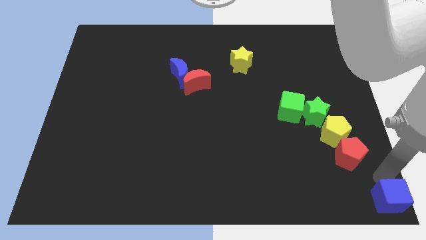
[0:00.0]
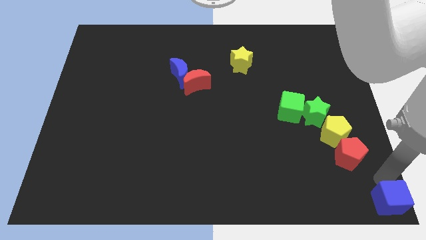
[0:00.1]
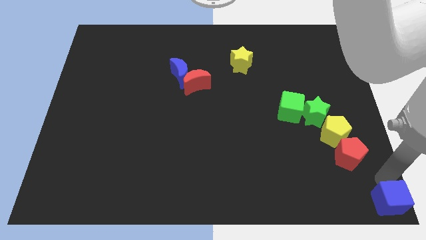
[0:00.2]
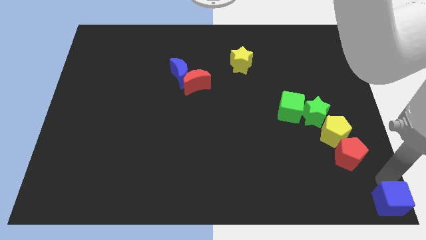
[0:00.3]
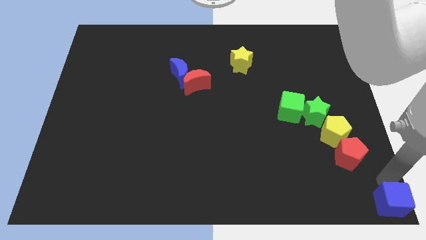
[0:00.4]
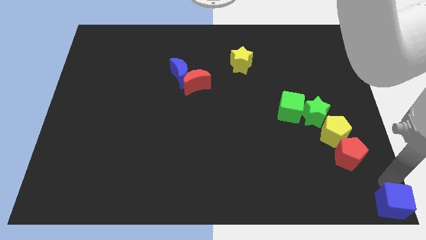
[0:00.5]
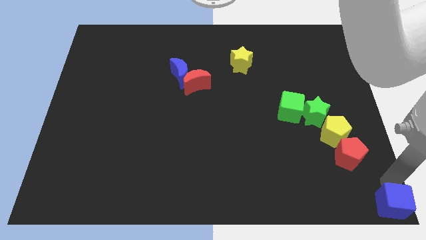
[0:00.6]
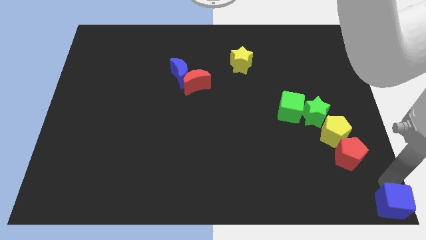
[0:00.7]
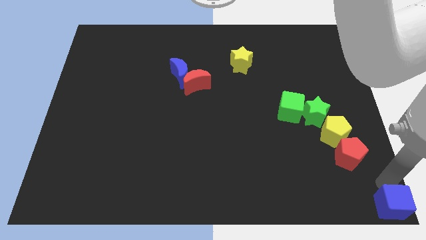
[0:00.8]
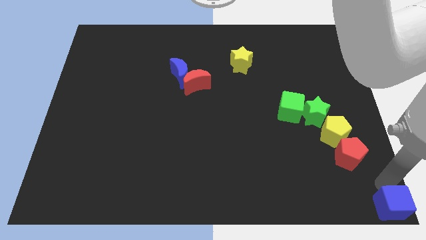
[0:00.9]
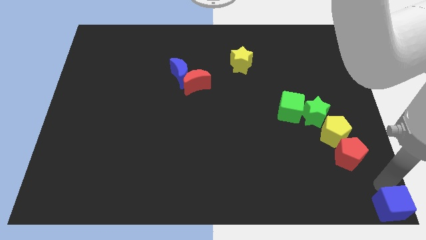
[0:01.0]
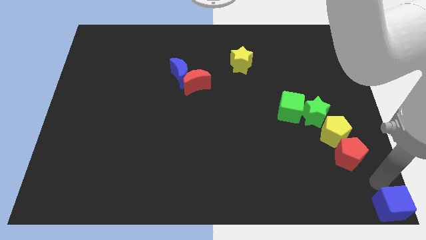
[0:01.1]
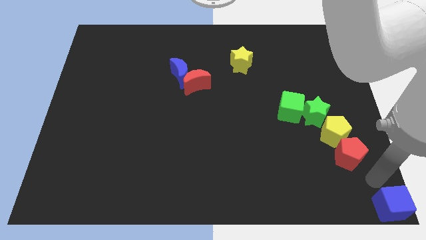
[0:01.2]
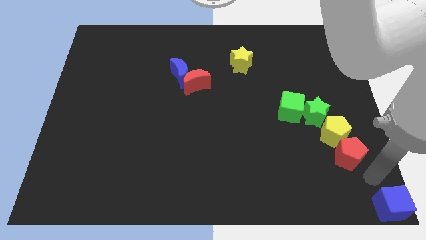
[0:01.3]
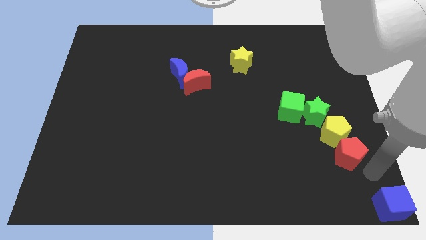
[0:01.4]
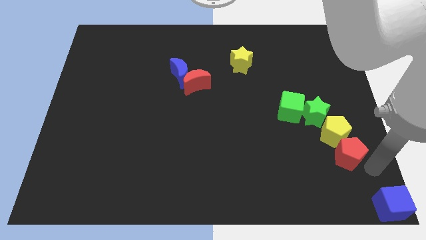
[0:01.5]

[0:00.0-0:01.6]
place your arm in between the red pentagon and blue cube

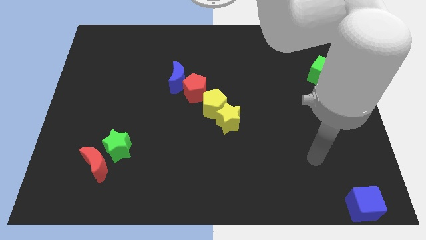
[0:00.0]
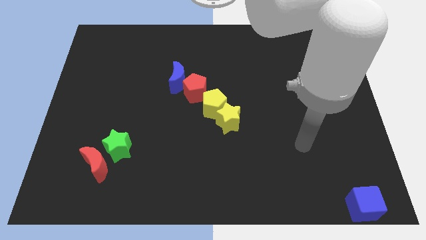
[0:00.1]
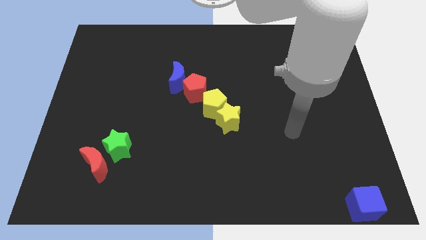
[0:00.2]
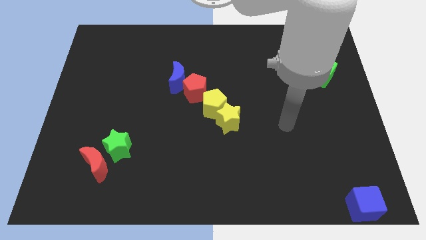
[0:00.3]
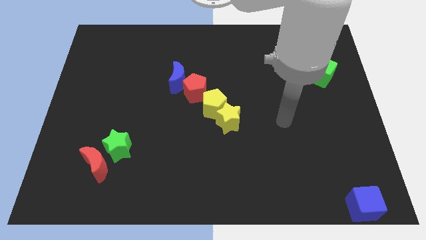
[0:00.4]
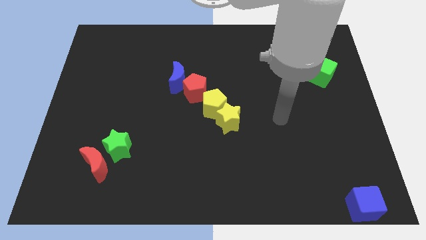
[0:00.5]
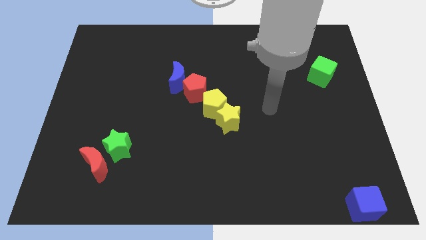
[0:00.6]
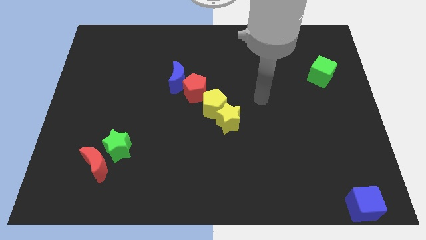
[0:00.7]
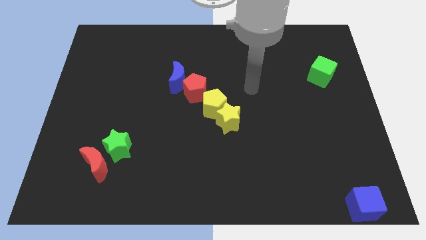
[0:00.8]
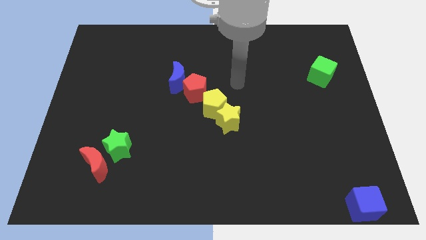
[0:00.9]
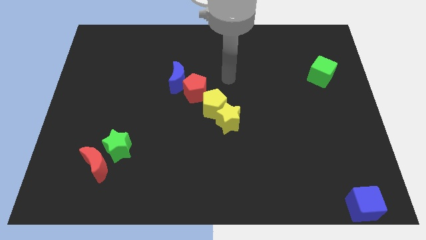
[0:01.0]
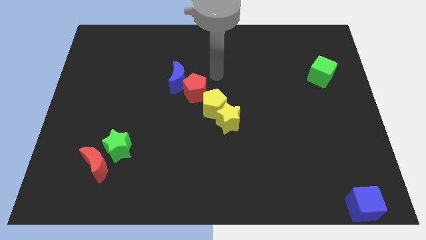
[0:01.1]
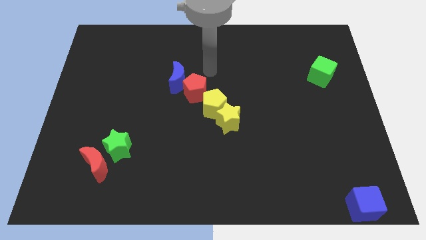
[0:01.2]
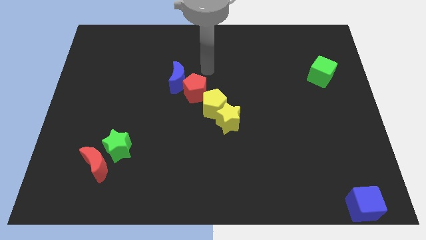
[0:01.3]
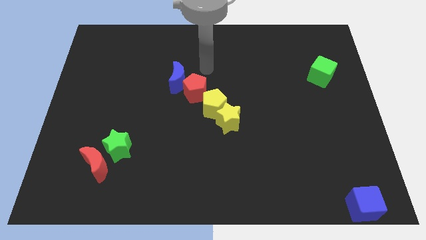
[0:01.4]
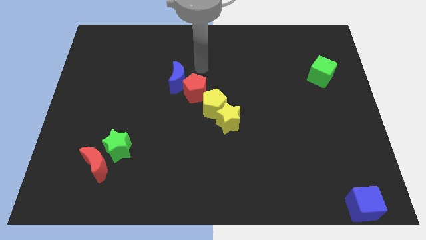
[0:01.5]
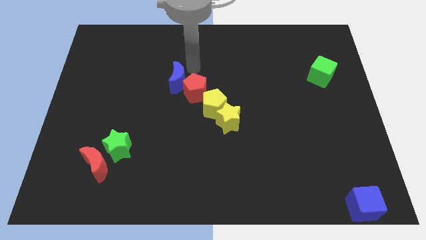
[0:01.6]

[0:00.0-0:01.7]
move the arm to the top of the red pentagon

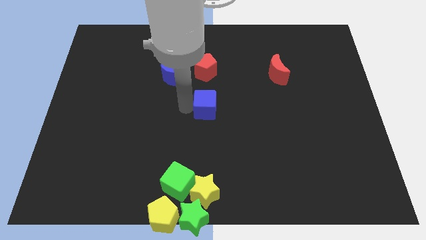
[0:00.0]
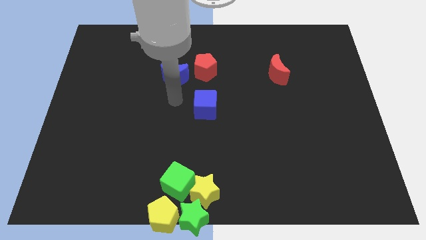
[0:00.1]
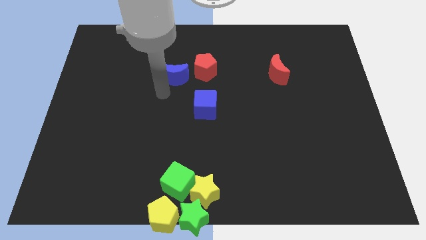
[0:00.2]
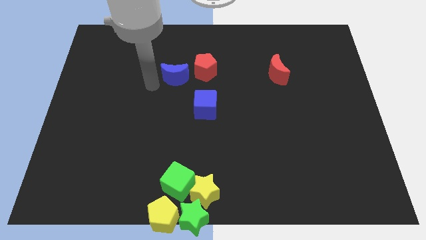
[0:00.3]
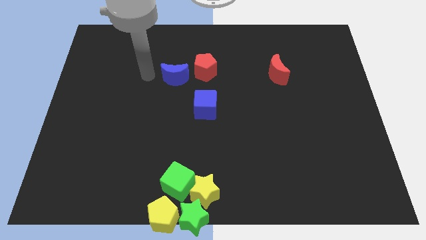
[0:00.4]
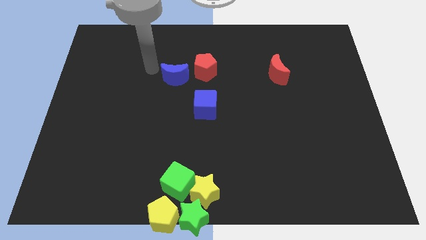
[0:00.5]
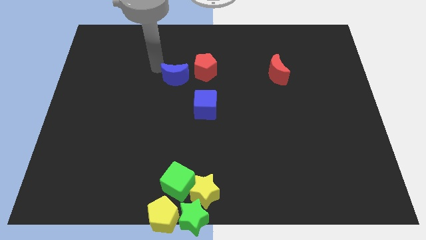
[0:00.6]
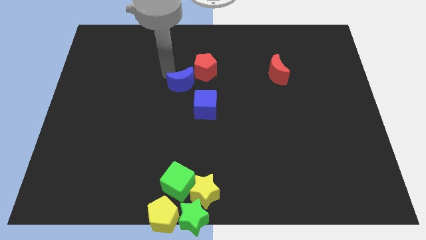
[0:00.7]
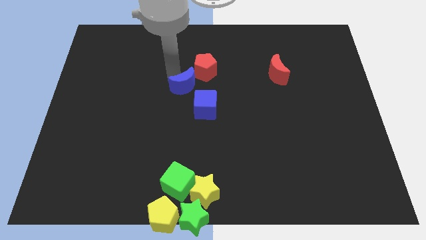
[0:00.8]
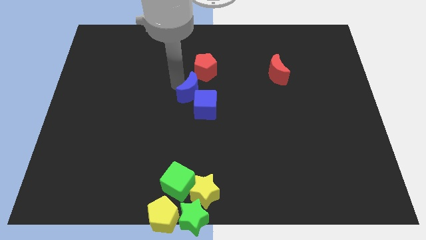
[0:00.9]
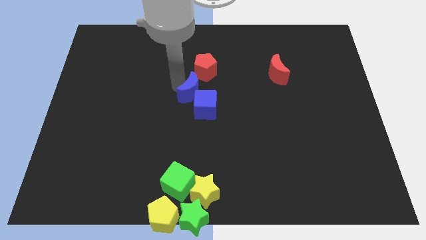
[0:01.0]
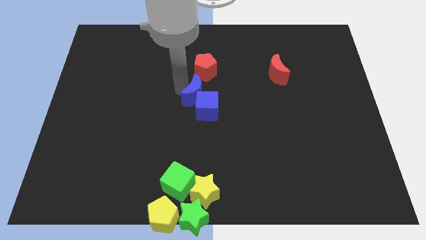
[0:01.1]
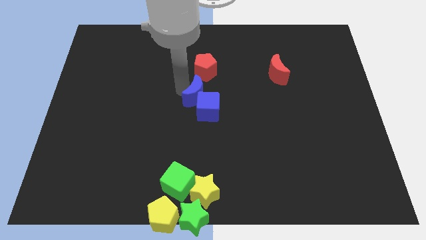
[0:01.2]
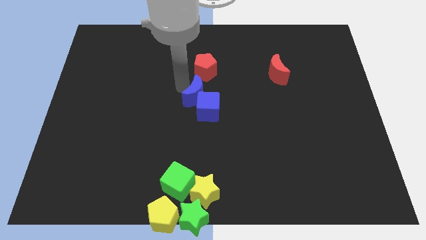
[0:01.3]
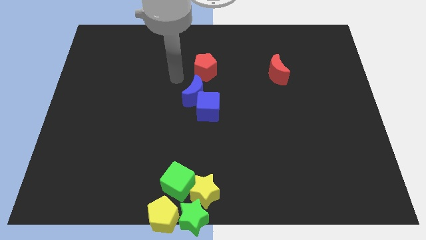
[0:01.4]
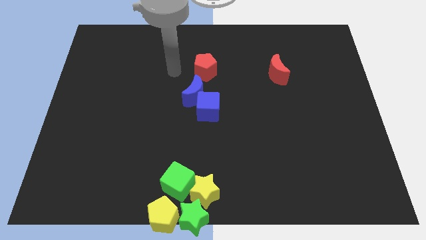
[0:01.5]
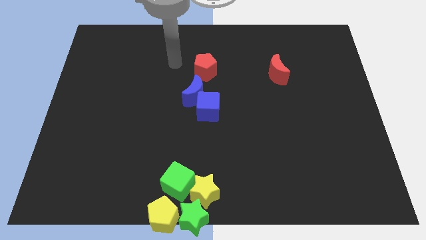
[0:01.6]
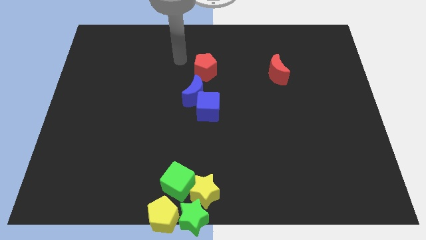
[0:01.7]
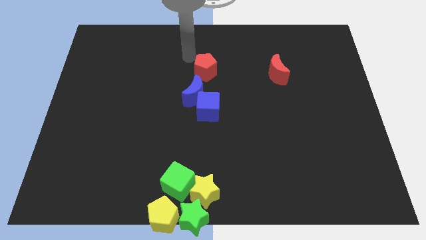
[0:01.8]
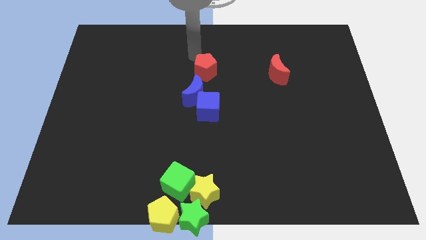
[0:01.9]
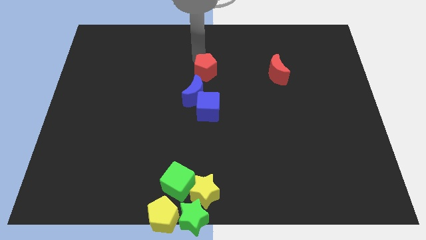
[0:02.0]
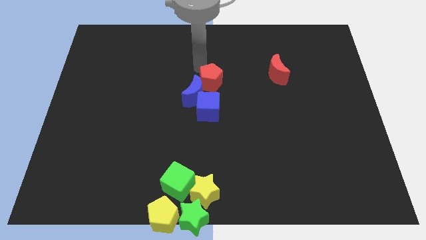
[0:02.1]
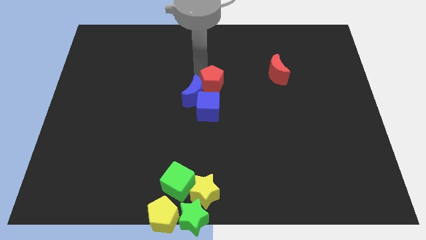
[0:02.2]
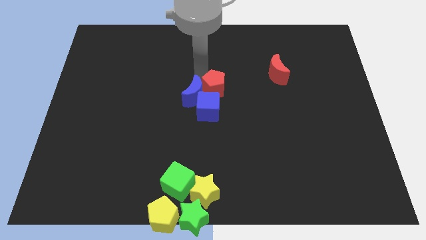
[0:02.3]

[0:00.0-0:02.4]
push the blue moon and red pentagon towards the blue cube

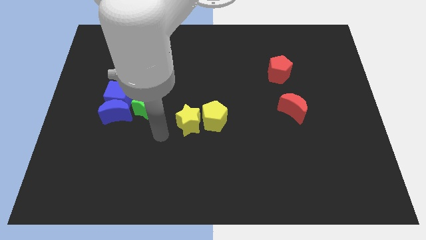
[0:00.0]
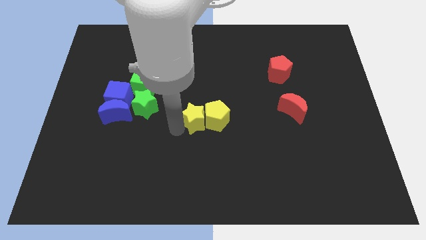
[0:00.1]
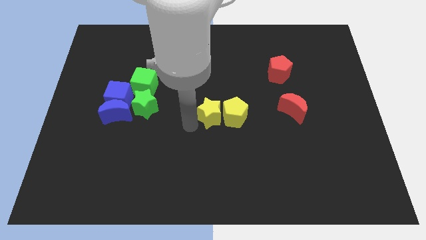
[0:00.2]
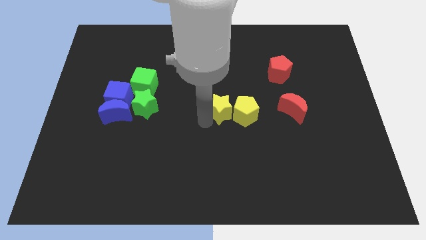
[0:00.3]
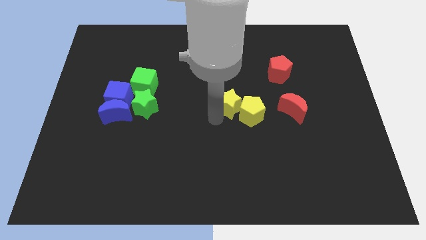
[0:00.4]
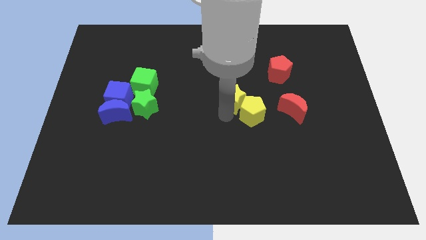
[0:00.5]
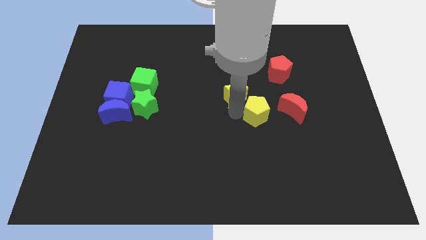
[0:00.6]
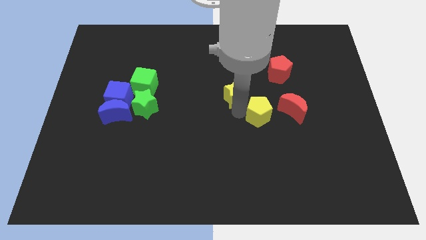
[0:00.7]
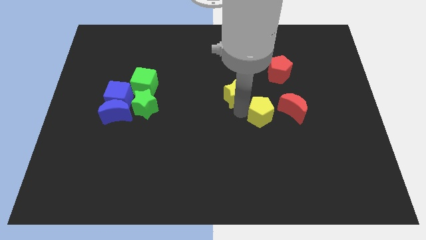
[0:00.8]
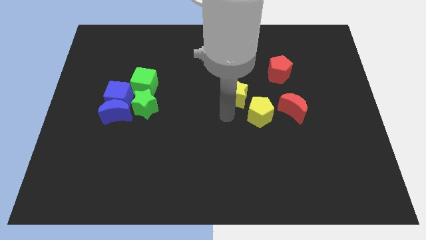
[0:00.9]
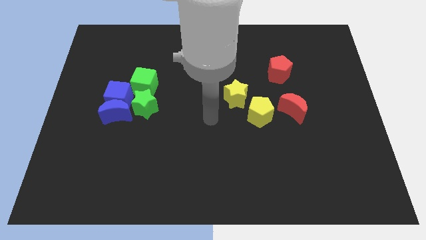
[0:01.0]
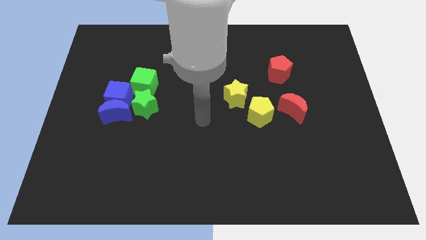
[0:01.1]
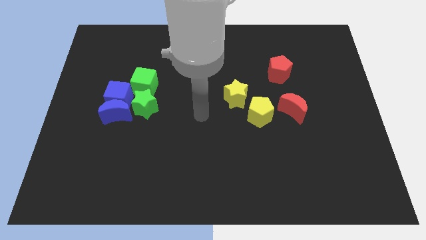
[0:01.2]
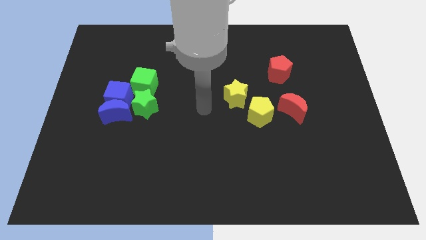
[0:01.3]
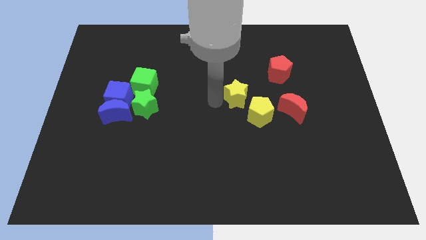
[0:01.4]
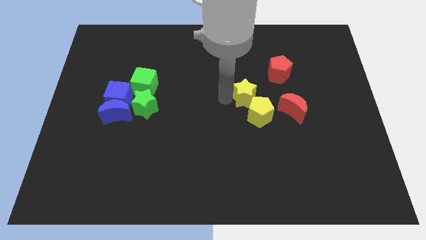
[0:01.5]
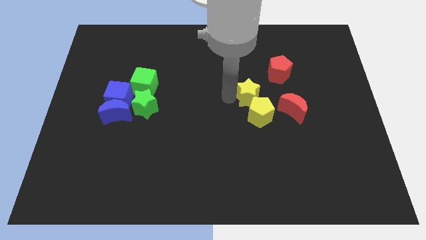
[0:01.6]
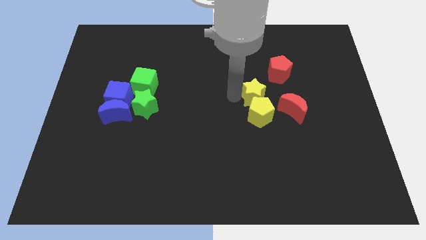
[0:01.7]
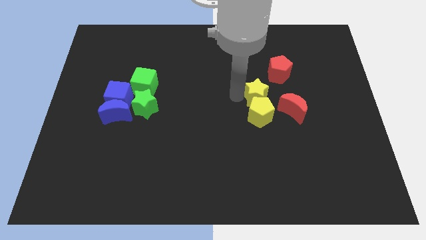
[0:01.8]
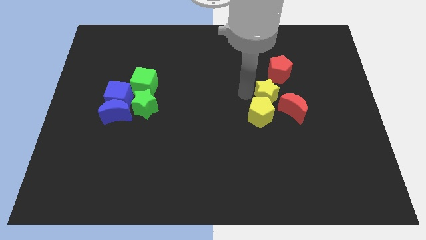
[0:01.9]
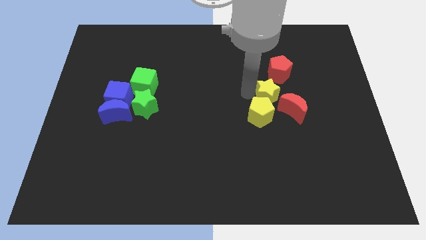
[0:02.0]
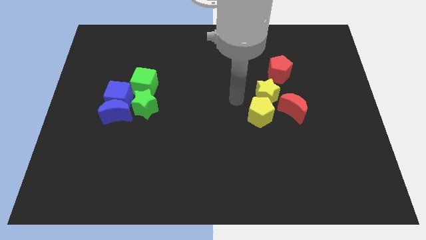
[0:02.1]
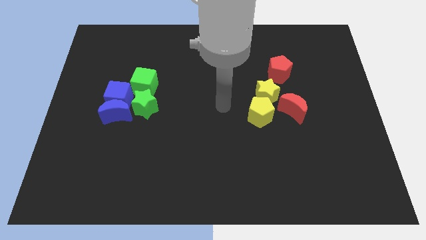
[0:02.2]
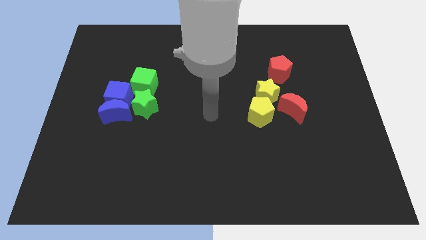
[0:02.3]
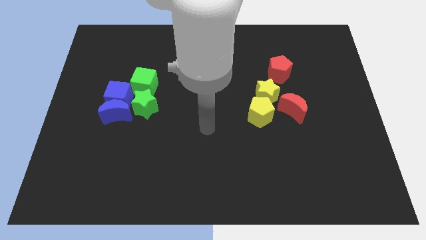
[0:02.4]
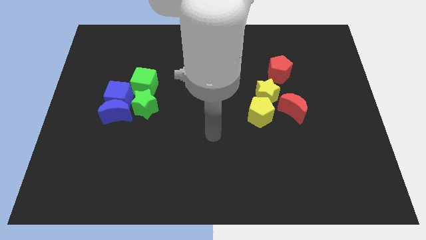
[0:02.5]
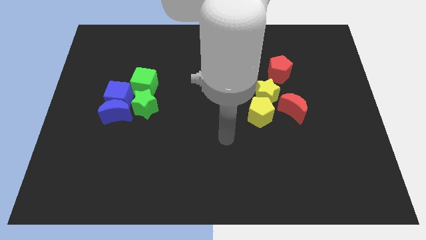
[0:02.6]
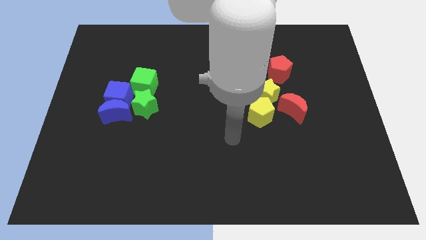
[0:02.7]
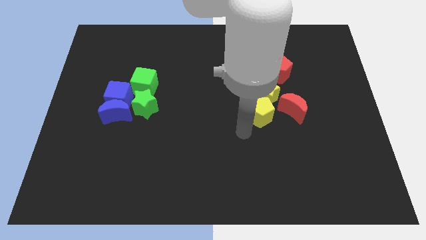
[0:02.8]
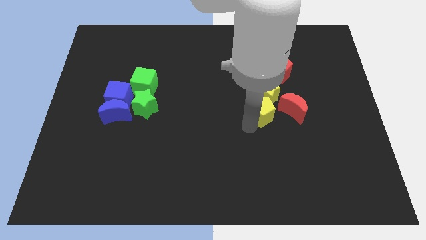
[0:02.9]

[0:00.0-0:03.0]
place the yellow star above the yellow pentagon

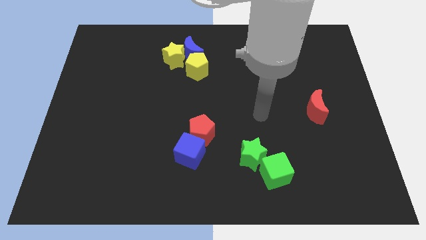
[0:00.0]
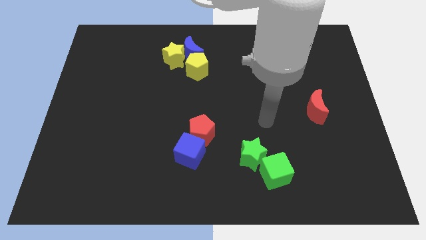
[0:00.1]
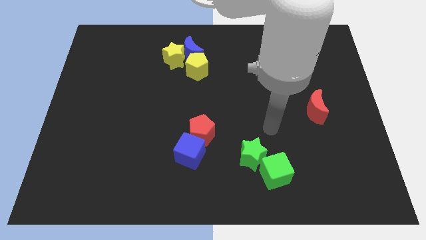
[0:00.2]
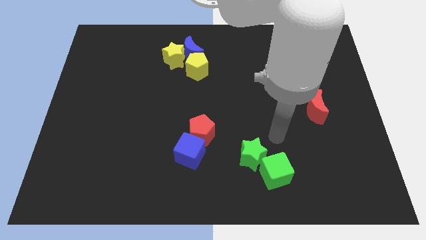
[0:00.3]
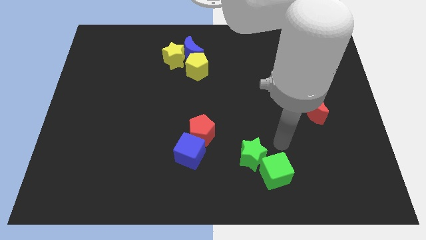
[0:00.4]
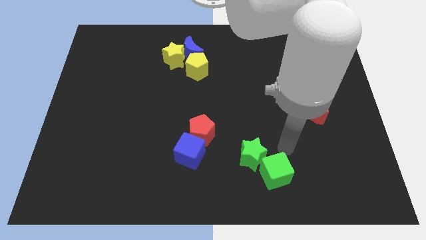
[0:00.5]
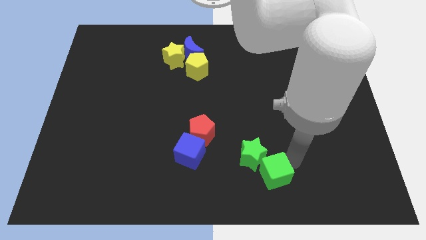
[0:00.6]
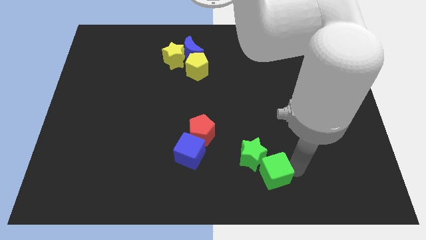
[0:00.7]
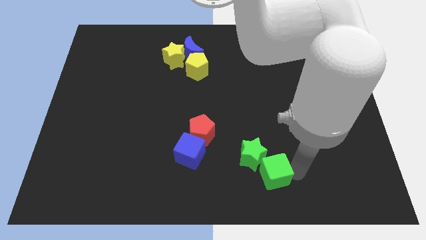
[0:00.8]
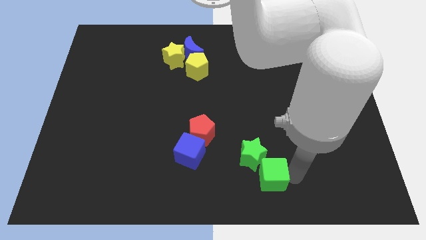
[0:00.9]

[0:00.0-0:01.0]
move arm close to green cube
